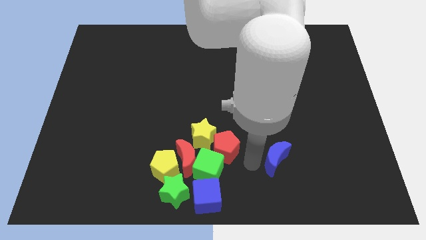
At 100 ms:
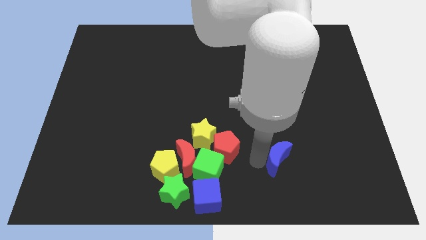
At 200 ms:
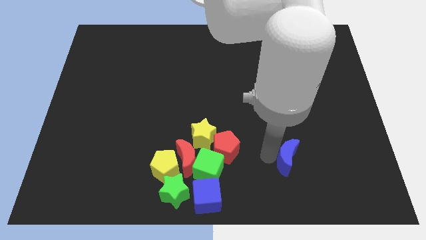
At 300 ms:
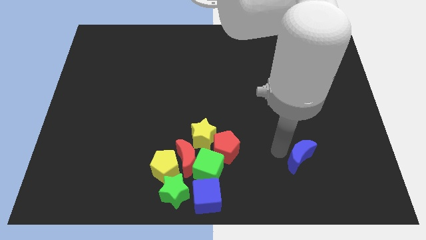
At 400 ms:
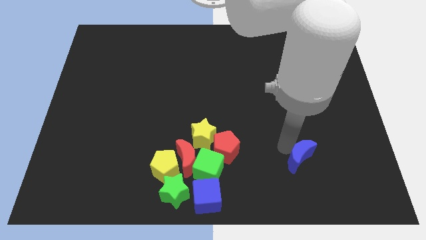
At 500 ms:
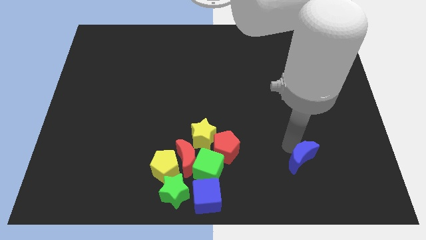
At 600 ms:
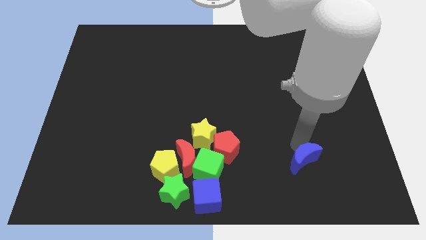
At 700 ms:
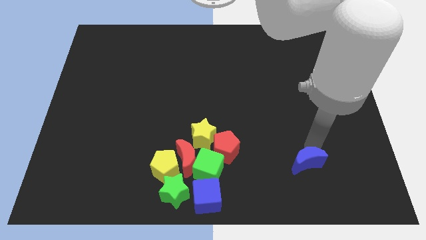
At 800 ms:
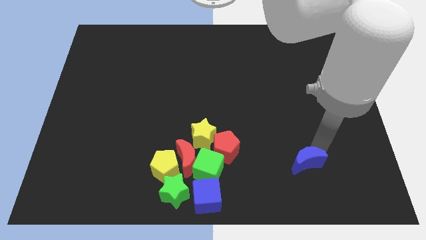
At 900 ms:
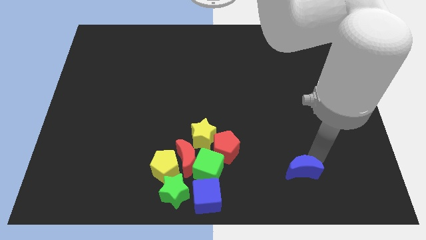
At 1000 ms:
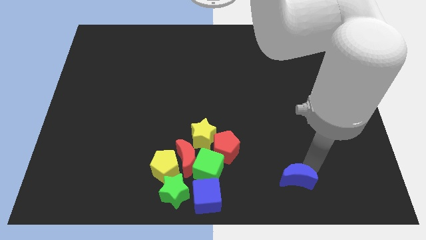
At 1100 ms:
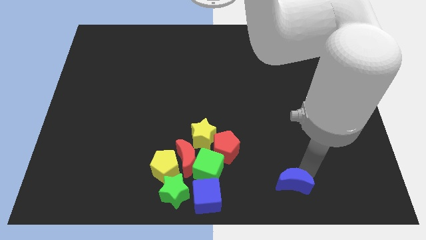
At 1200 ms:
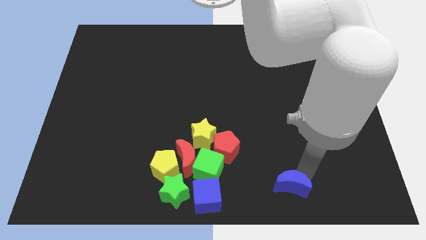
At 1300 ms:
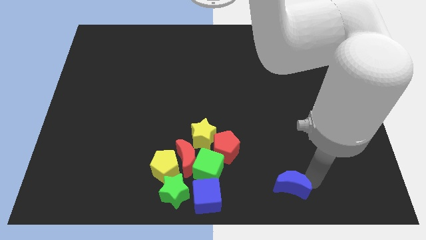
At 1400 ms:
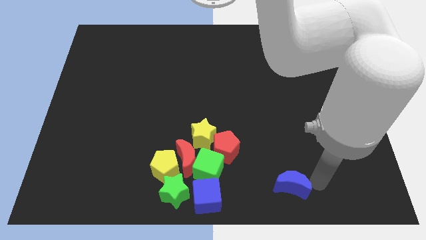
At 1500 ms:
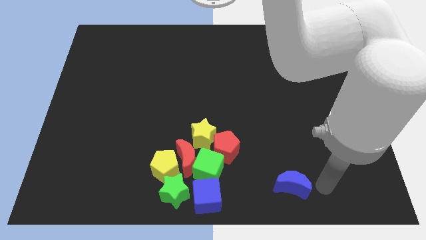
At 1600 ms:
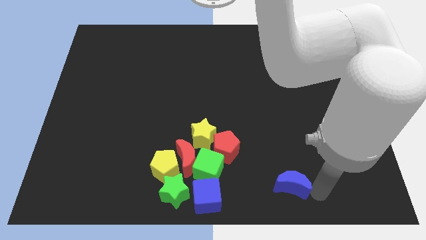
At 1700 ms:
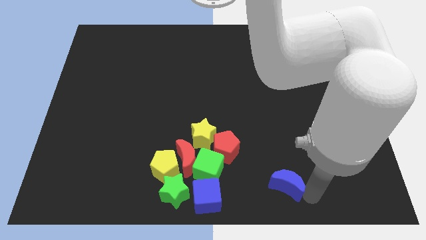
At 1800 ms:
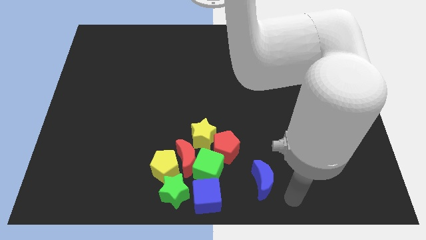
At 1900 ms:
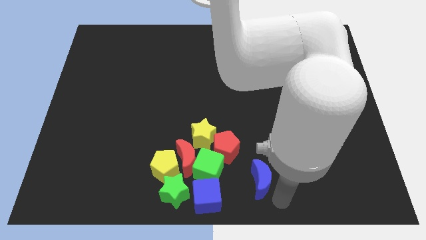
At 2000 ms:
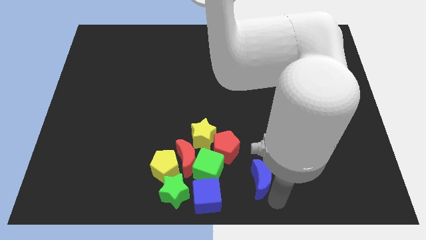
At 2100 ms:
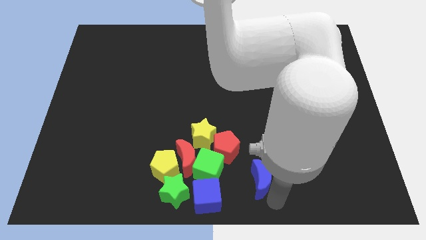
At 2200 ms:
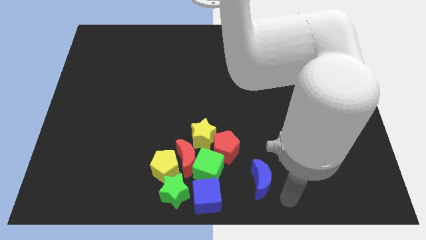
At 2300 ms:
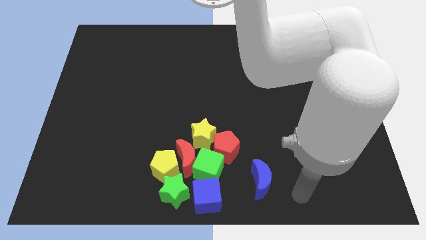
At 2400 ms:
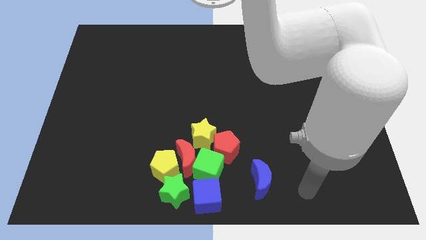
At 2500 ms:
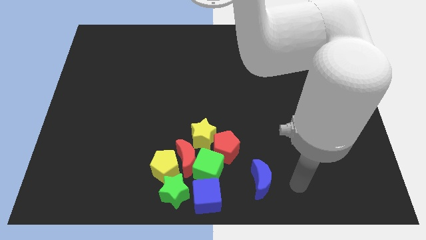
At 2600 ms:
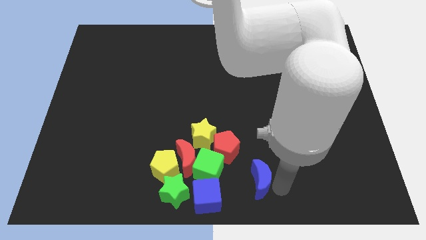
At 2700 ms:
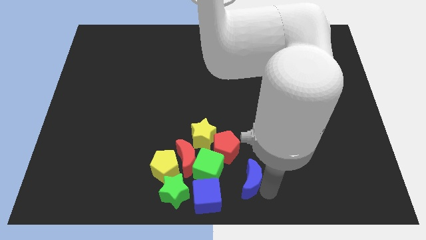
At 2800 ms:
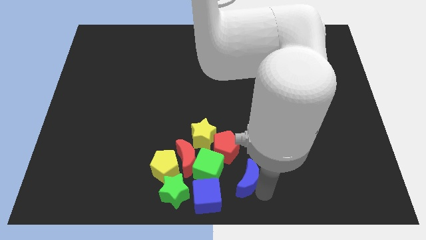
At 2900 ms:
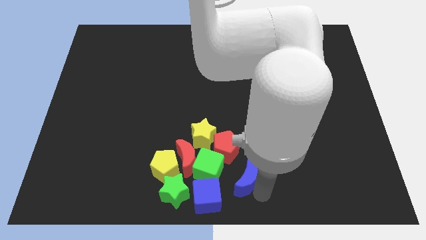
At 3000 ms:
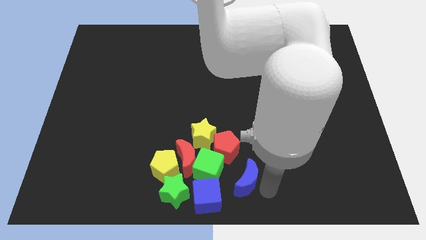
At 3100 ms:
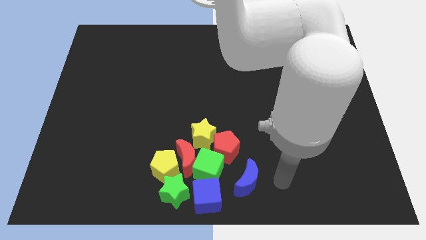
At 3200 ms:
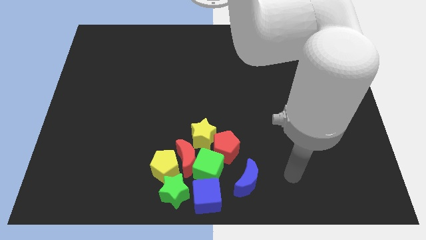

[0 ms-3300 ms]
move the blue moon to the bottom center of the board

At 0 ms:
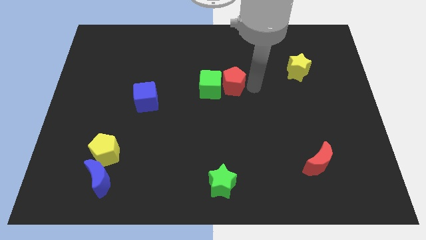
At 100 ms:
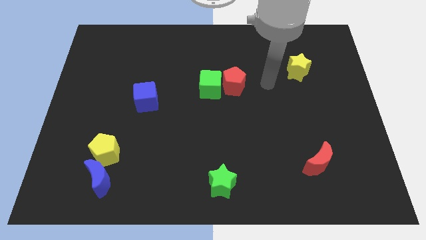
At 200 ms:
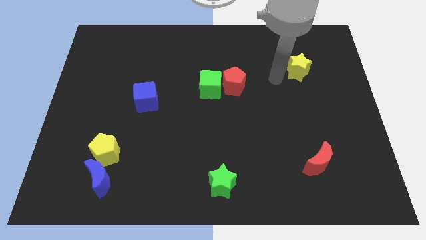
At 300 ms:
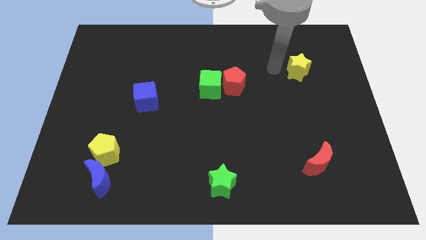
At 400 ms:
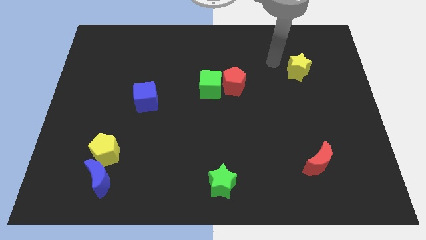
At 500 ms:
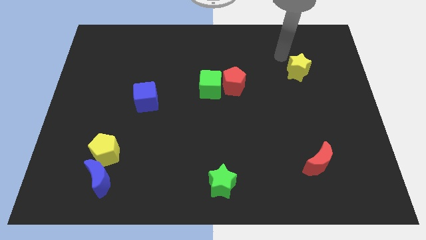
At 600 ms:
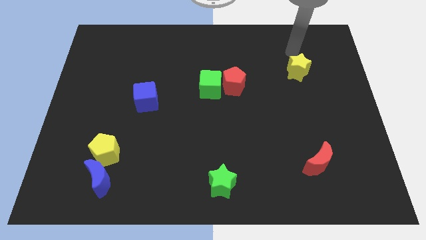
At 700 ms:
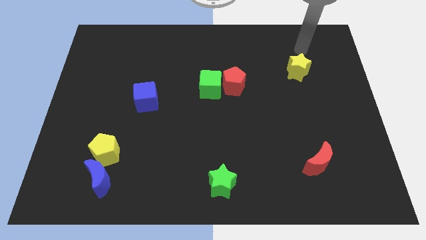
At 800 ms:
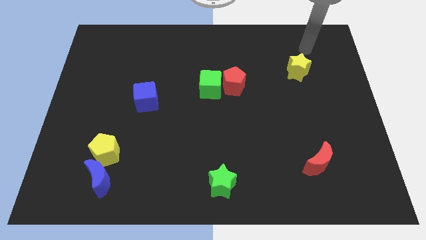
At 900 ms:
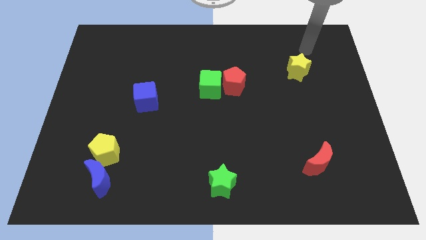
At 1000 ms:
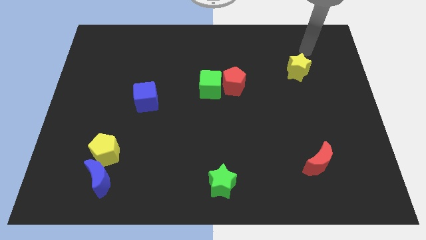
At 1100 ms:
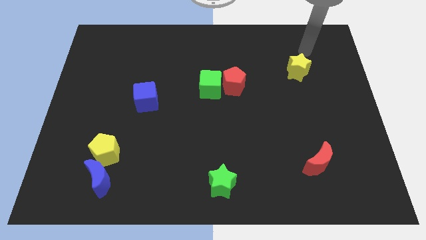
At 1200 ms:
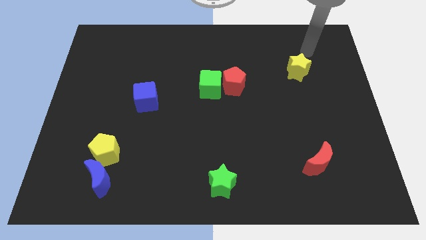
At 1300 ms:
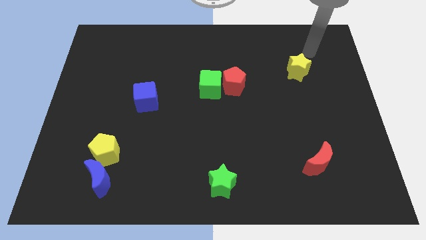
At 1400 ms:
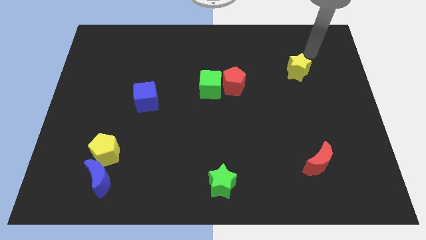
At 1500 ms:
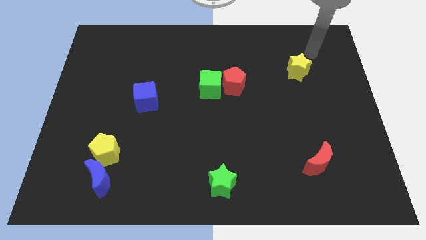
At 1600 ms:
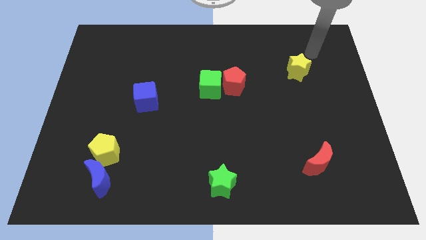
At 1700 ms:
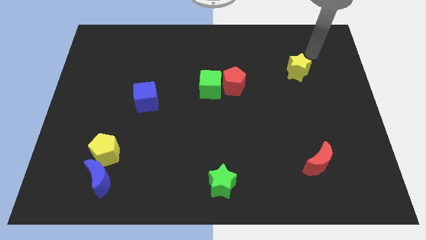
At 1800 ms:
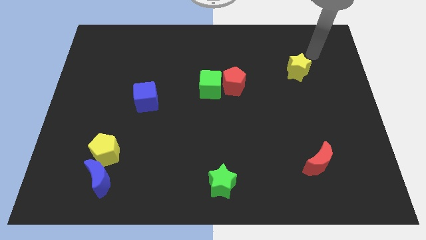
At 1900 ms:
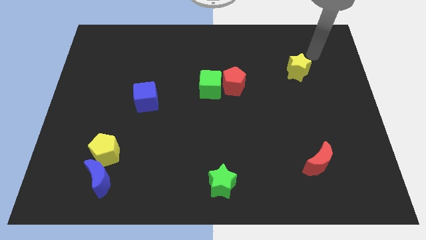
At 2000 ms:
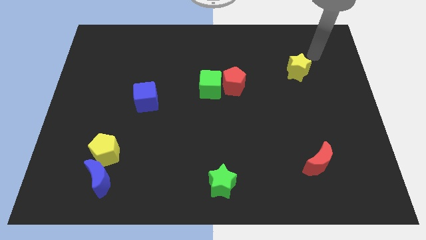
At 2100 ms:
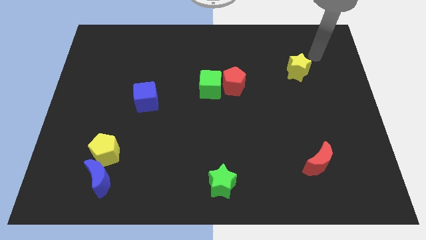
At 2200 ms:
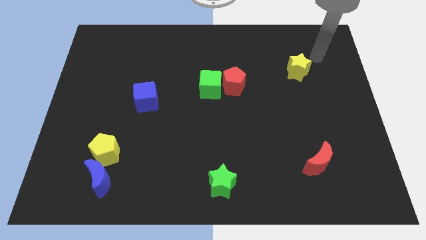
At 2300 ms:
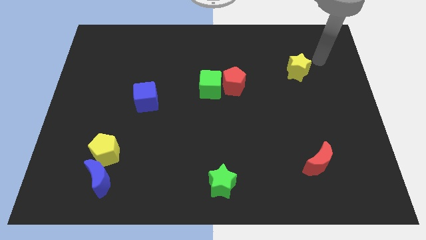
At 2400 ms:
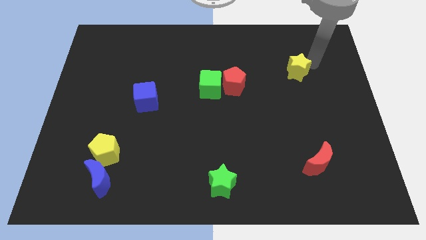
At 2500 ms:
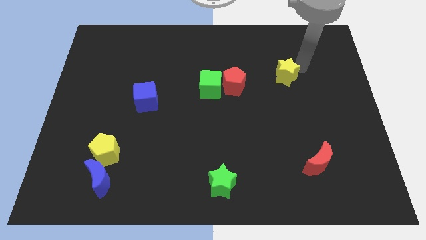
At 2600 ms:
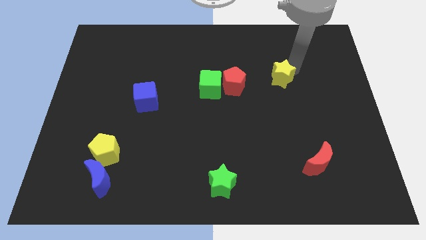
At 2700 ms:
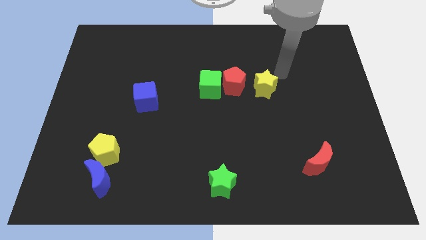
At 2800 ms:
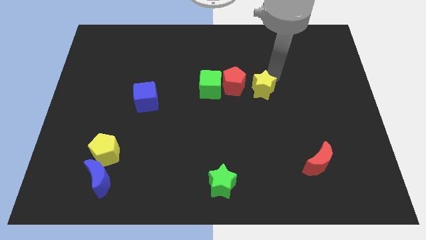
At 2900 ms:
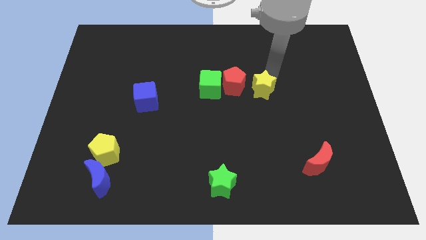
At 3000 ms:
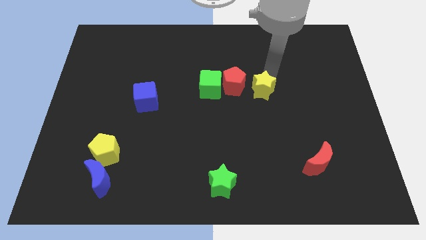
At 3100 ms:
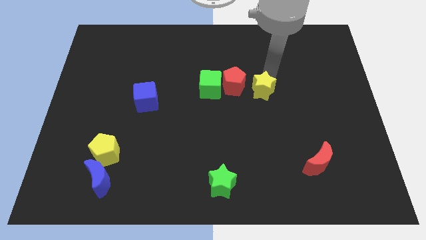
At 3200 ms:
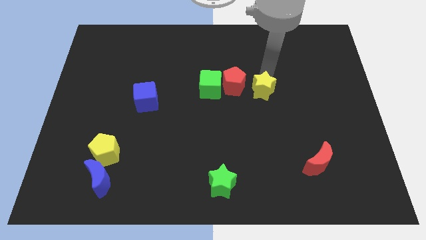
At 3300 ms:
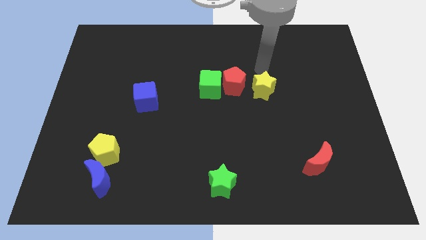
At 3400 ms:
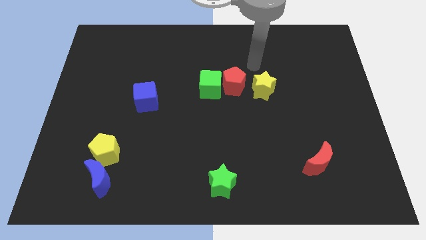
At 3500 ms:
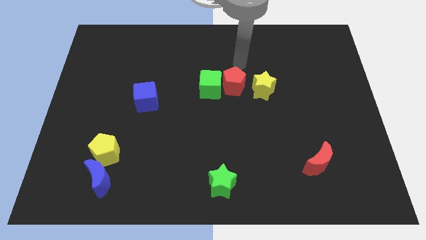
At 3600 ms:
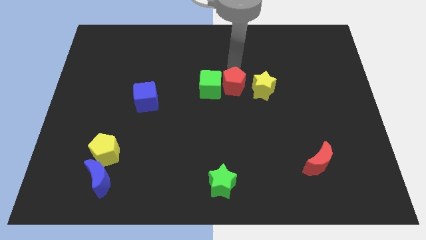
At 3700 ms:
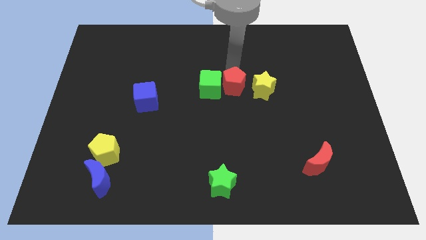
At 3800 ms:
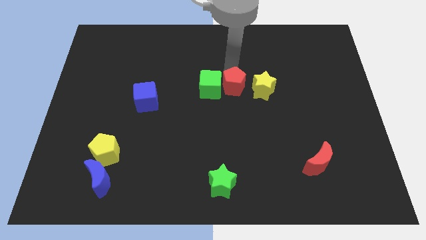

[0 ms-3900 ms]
push the yellow star to the right of the red pentagon

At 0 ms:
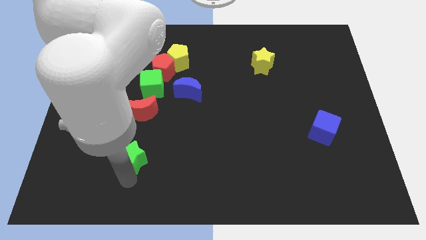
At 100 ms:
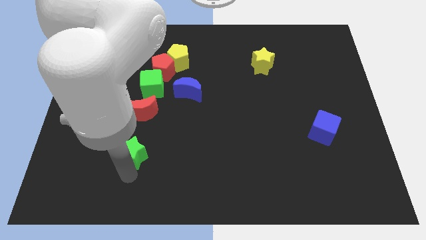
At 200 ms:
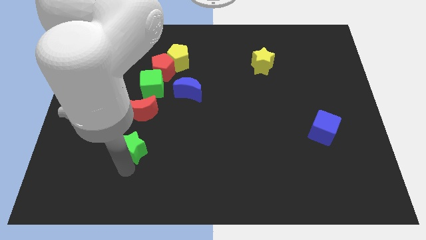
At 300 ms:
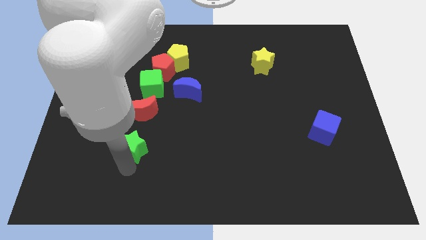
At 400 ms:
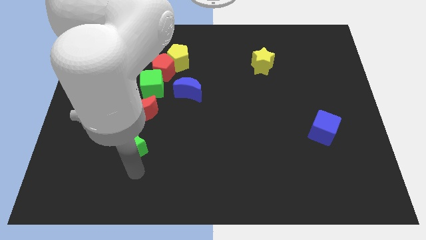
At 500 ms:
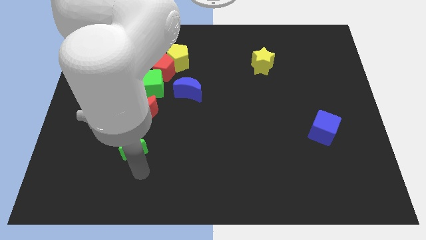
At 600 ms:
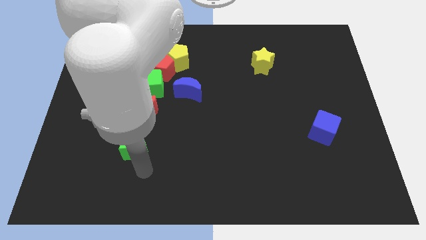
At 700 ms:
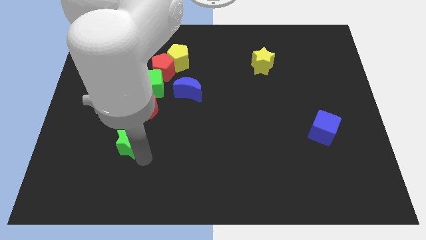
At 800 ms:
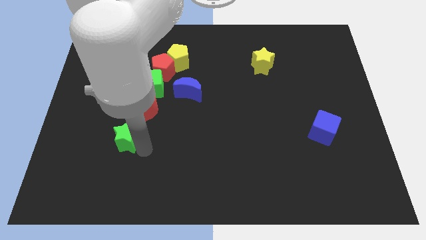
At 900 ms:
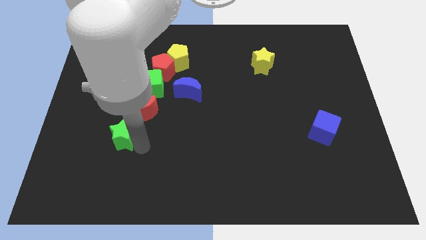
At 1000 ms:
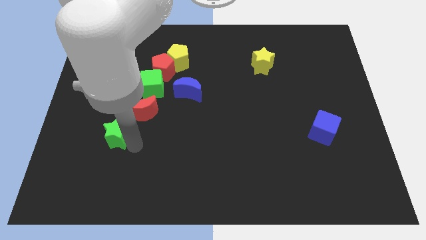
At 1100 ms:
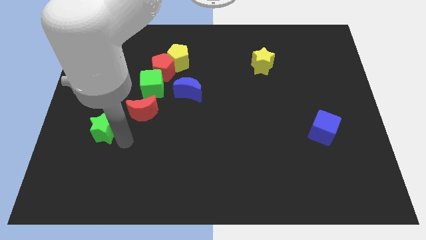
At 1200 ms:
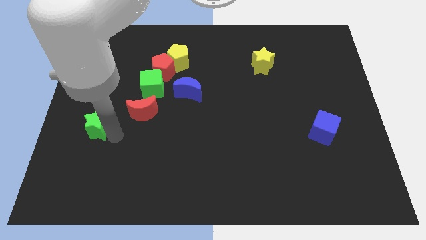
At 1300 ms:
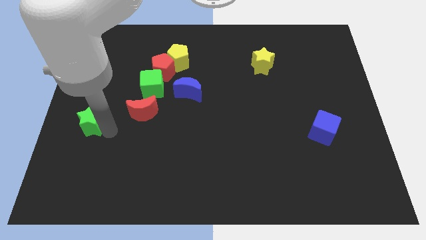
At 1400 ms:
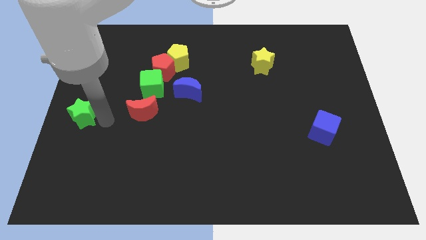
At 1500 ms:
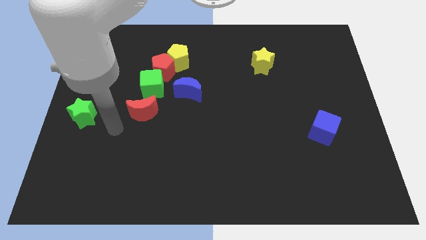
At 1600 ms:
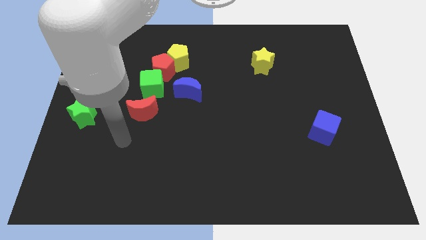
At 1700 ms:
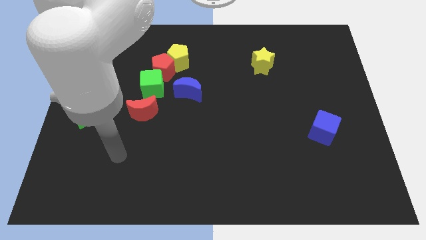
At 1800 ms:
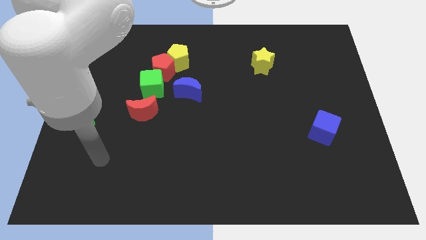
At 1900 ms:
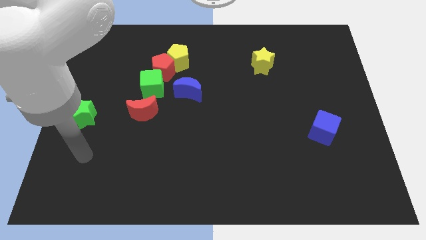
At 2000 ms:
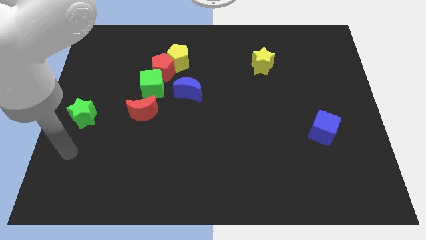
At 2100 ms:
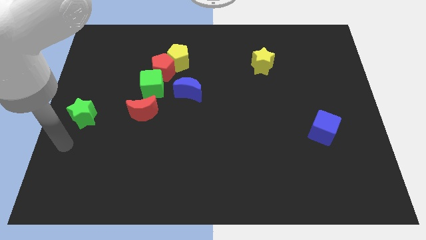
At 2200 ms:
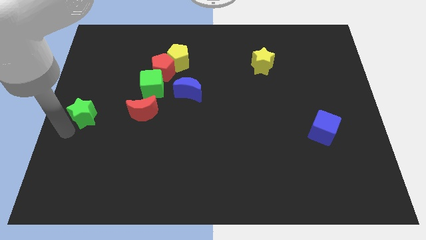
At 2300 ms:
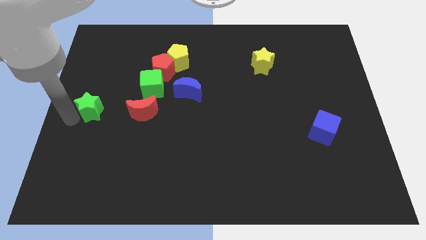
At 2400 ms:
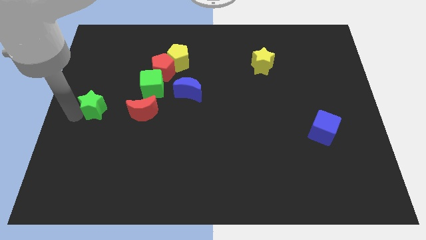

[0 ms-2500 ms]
push the green star diagonal to the left of the red crescent
